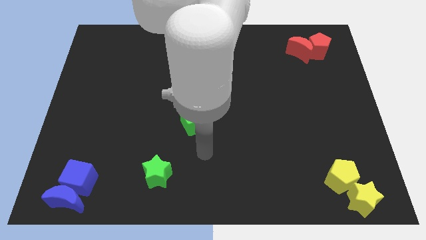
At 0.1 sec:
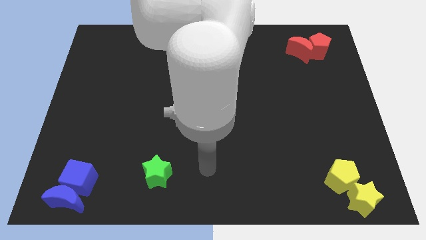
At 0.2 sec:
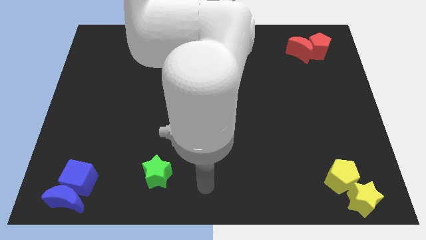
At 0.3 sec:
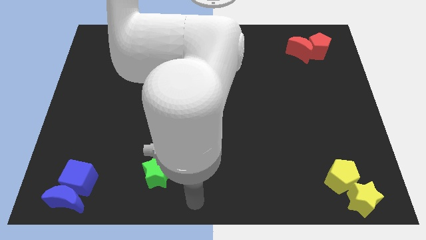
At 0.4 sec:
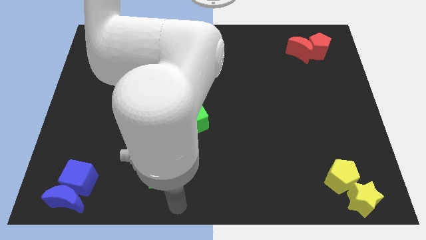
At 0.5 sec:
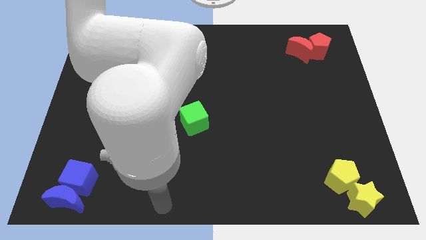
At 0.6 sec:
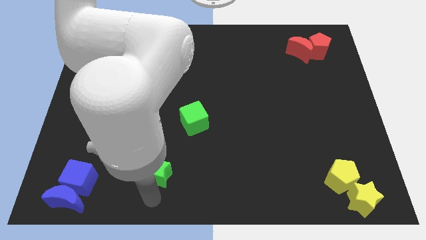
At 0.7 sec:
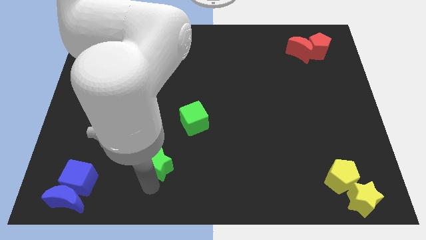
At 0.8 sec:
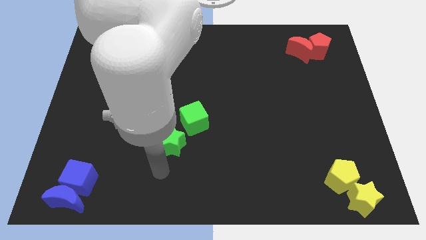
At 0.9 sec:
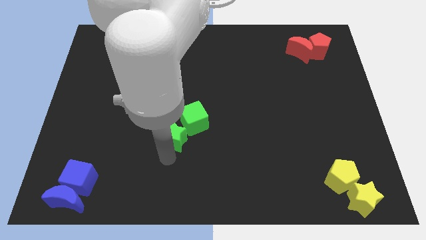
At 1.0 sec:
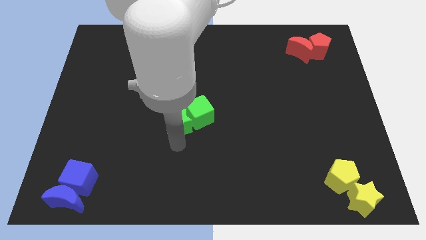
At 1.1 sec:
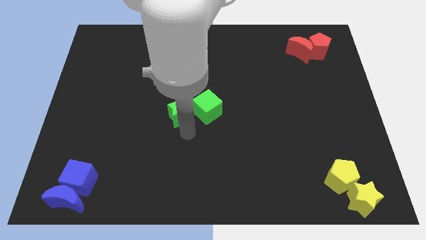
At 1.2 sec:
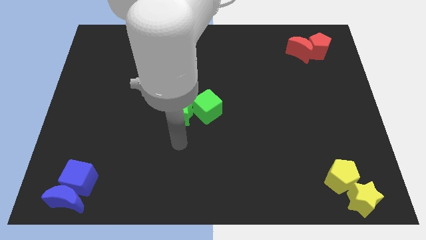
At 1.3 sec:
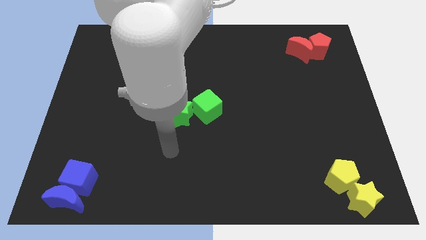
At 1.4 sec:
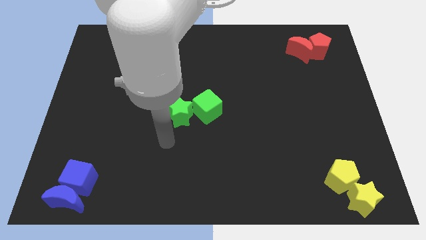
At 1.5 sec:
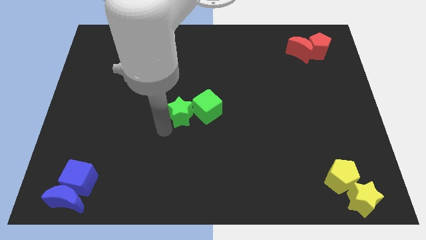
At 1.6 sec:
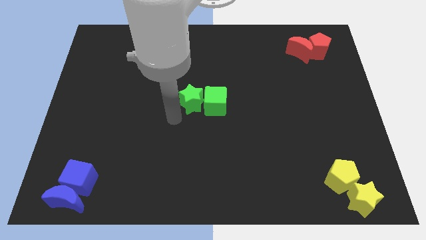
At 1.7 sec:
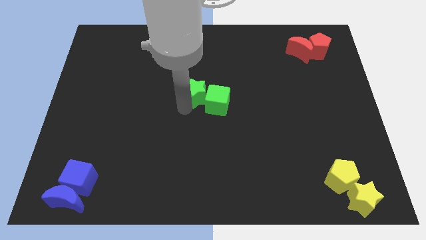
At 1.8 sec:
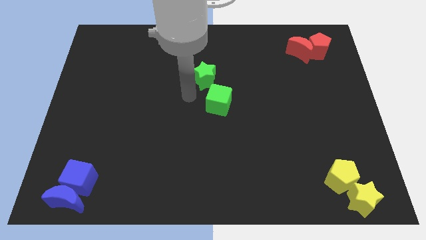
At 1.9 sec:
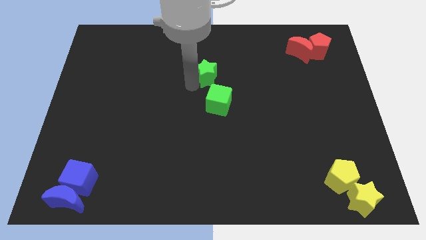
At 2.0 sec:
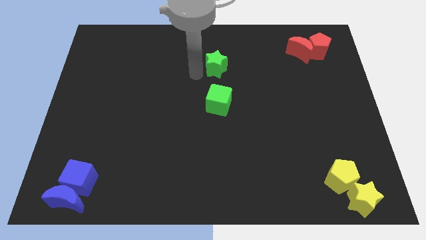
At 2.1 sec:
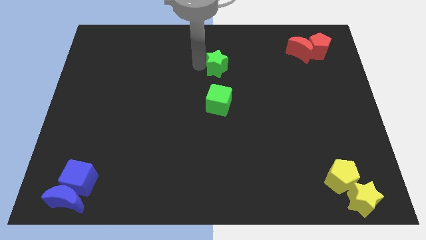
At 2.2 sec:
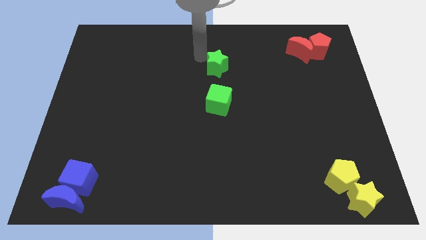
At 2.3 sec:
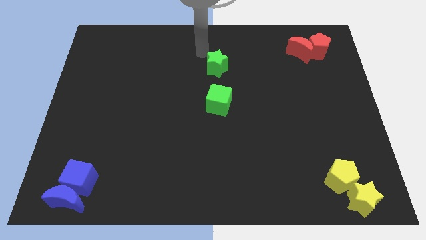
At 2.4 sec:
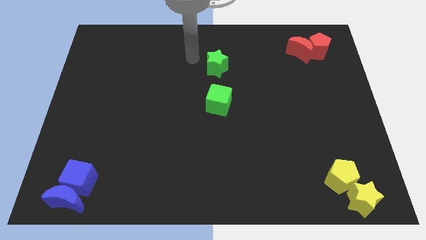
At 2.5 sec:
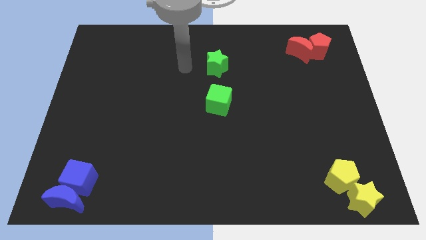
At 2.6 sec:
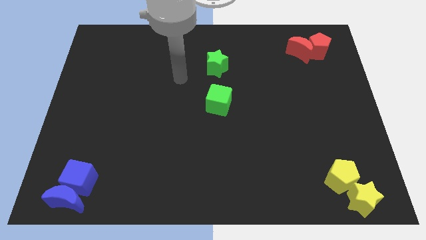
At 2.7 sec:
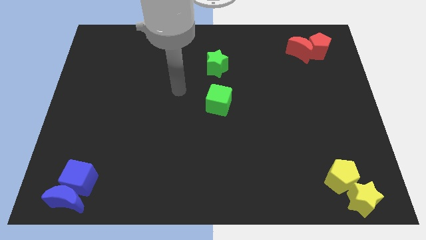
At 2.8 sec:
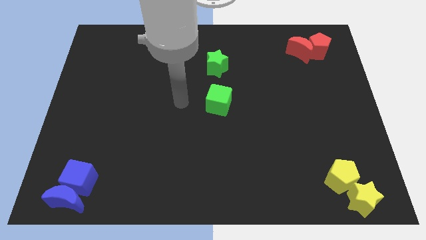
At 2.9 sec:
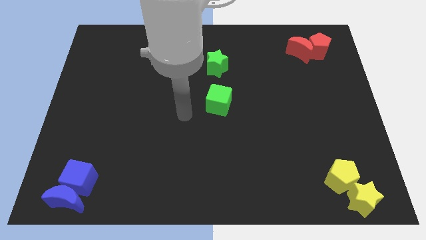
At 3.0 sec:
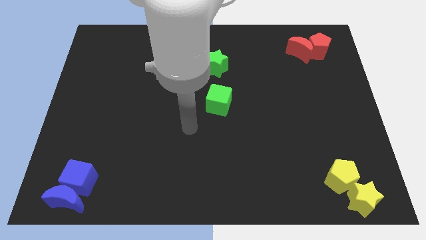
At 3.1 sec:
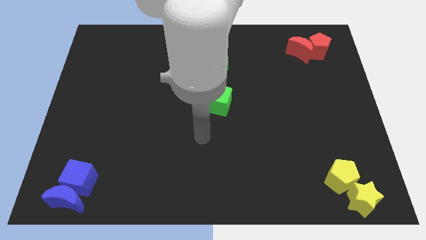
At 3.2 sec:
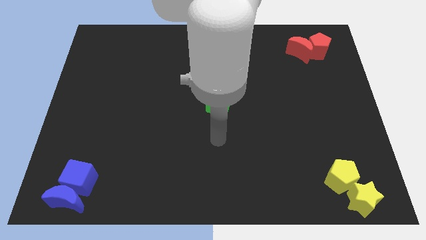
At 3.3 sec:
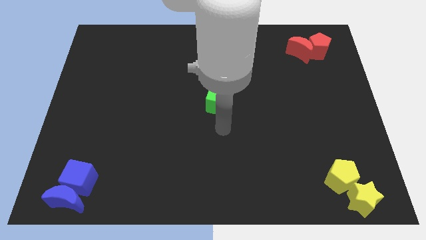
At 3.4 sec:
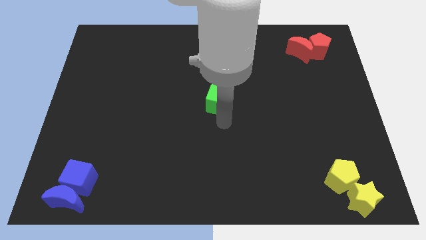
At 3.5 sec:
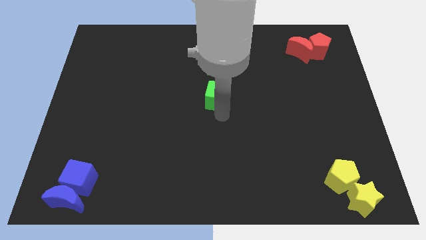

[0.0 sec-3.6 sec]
push the green cube with the green star

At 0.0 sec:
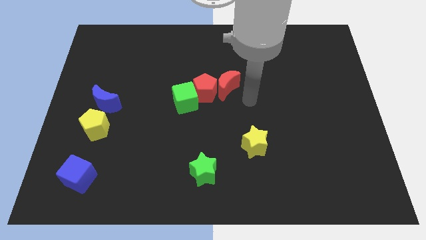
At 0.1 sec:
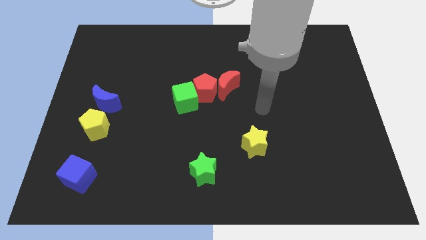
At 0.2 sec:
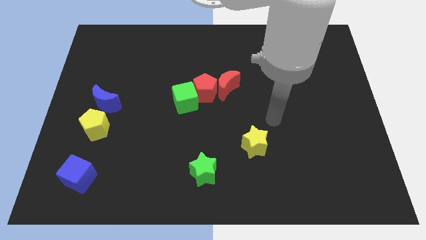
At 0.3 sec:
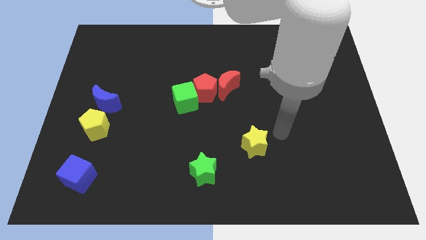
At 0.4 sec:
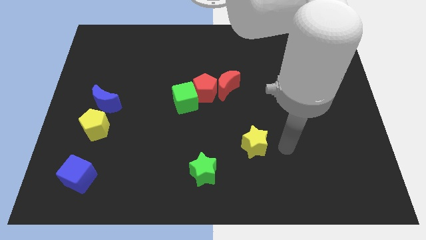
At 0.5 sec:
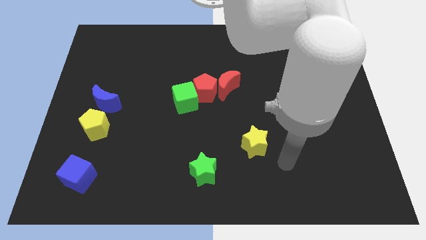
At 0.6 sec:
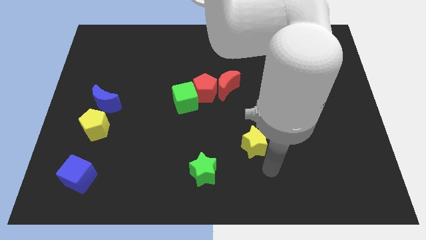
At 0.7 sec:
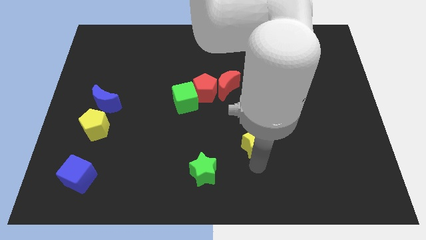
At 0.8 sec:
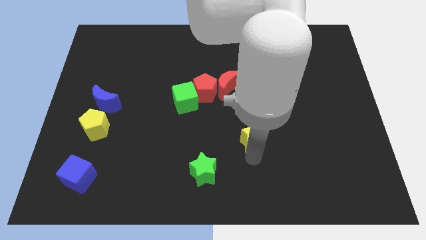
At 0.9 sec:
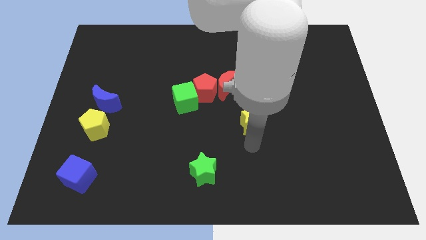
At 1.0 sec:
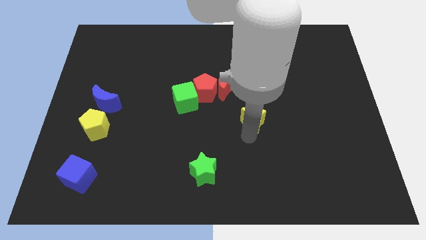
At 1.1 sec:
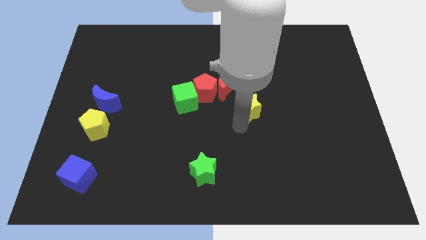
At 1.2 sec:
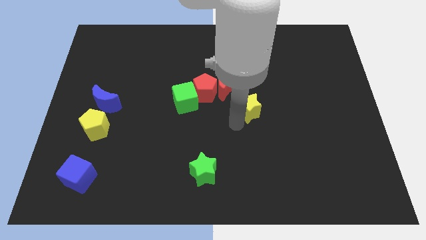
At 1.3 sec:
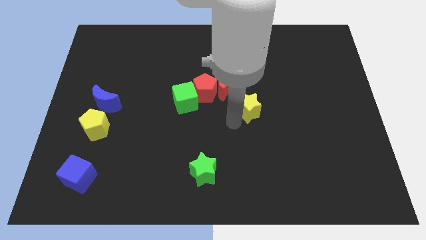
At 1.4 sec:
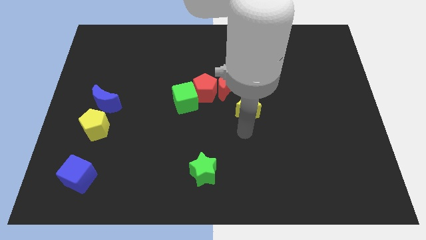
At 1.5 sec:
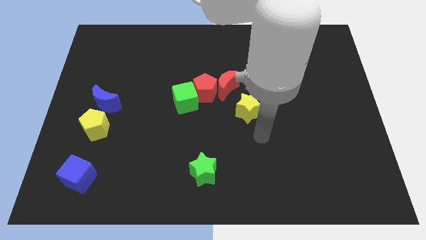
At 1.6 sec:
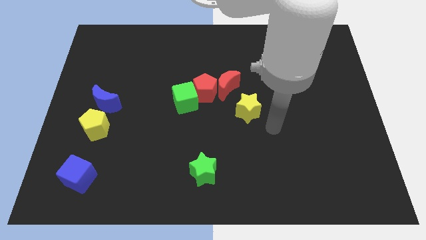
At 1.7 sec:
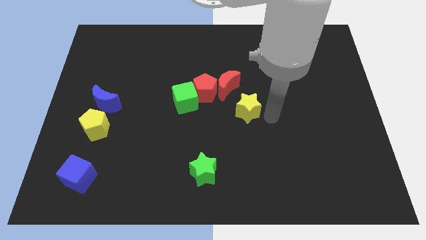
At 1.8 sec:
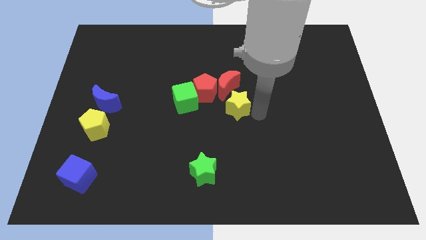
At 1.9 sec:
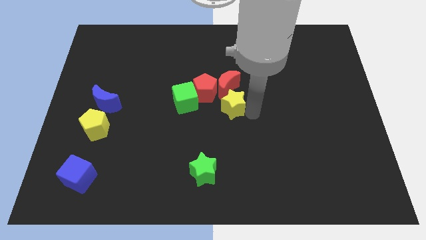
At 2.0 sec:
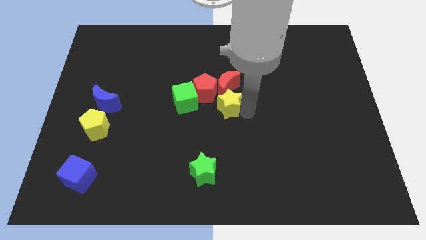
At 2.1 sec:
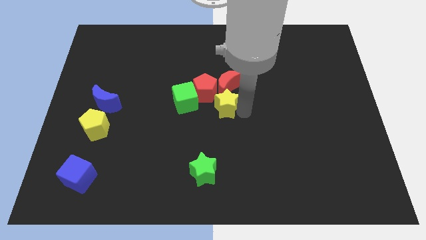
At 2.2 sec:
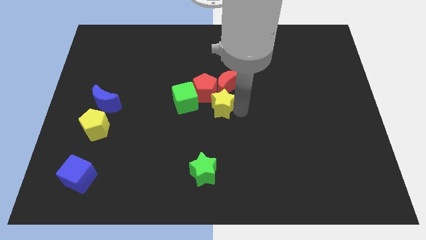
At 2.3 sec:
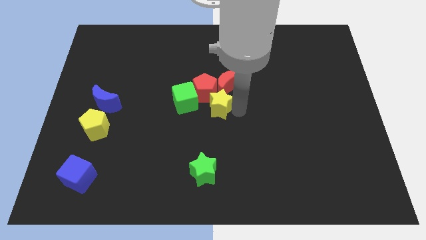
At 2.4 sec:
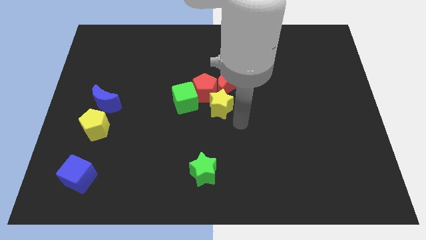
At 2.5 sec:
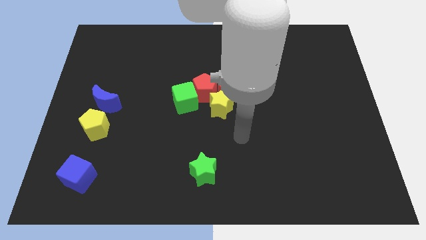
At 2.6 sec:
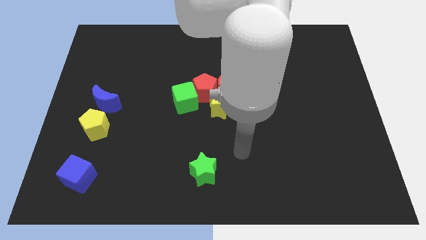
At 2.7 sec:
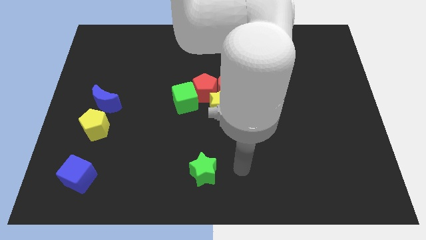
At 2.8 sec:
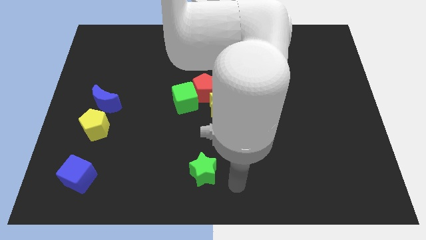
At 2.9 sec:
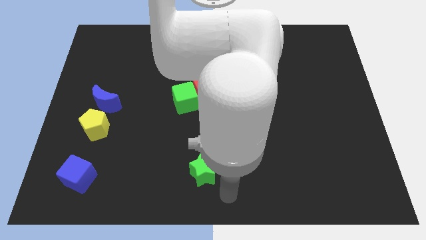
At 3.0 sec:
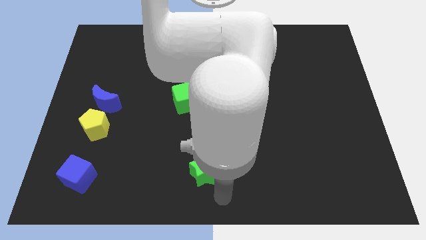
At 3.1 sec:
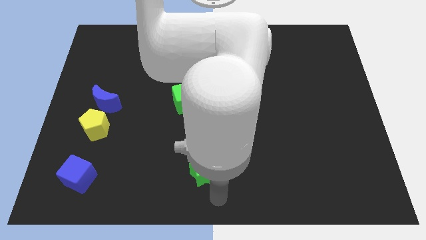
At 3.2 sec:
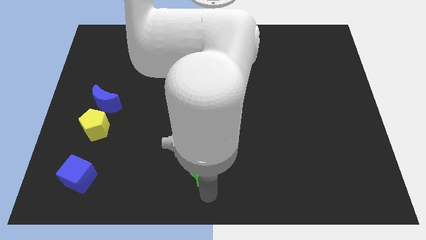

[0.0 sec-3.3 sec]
push the yellow star to the bottom side of the red blocks

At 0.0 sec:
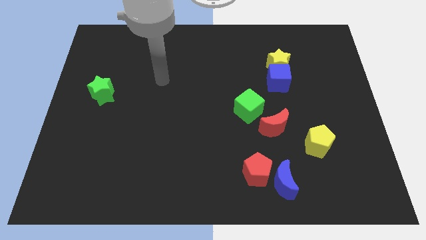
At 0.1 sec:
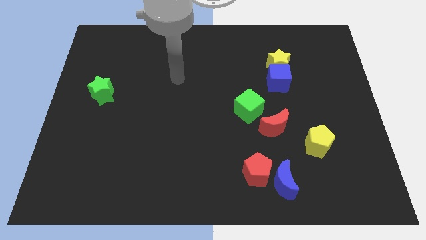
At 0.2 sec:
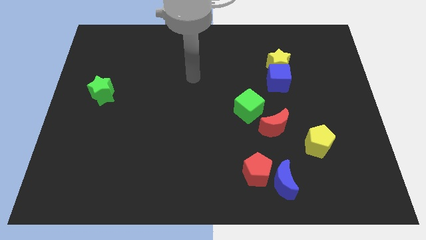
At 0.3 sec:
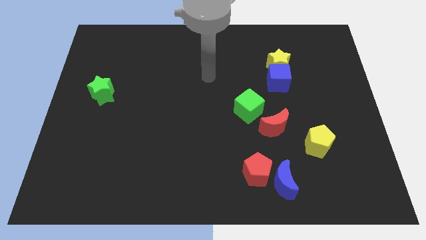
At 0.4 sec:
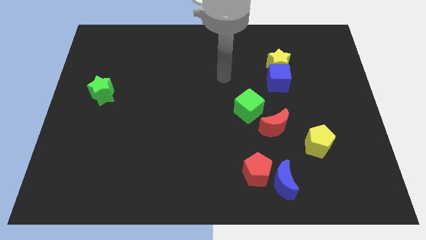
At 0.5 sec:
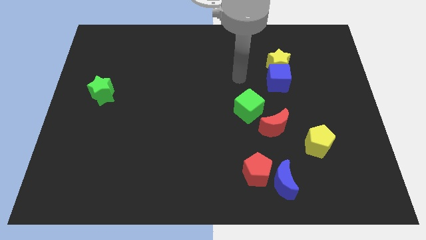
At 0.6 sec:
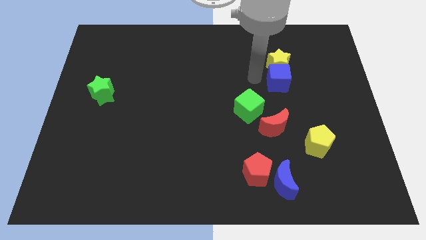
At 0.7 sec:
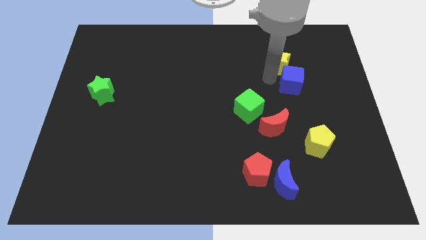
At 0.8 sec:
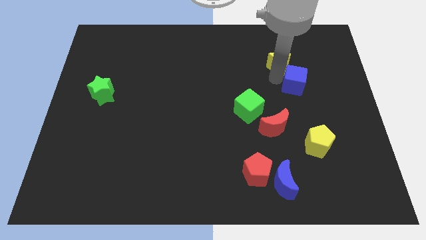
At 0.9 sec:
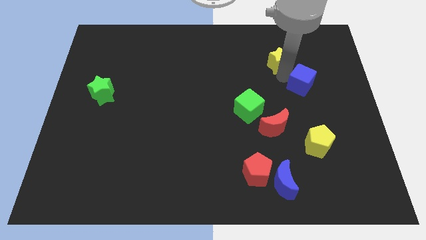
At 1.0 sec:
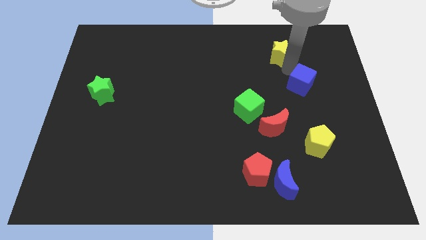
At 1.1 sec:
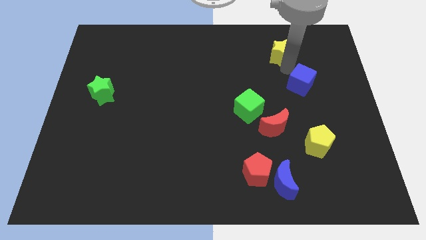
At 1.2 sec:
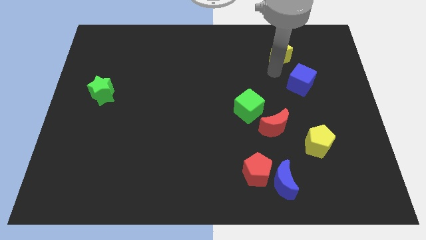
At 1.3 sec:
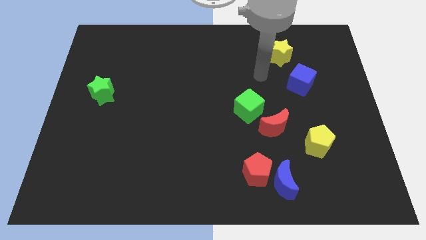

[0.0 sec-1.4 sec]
separate the blue cube and yellow star

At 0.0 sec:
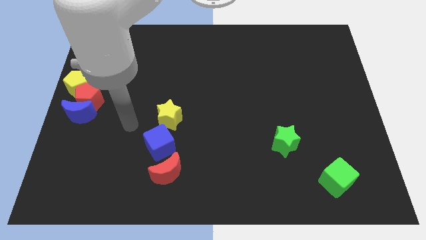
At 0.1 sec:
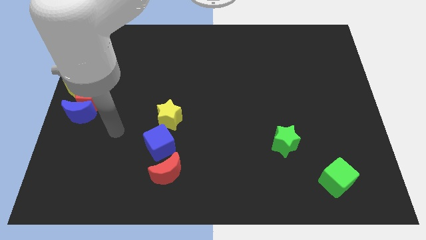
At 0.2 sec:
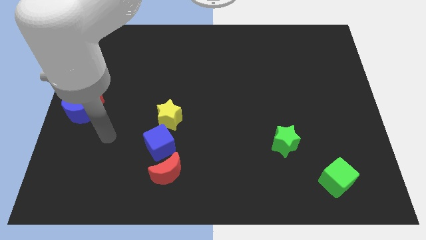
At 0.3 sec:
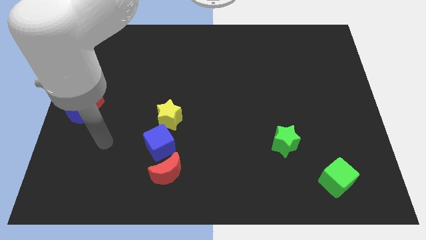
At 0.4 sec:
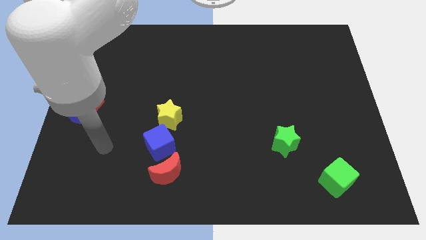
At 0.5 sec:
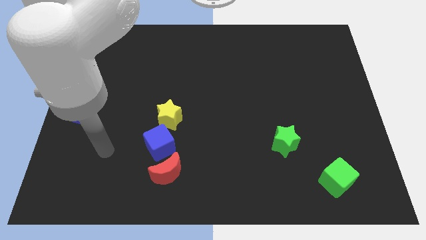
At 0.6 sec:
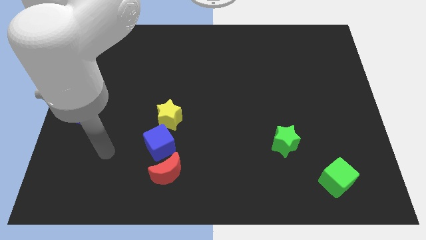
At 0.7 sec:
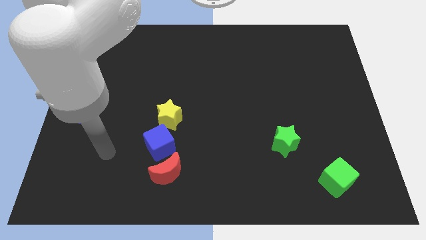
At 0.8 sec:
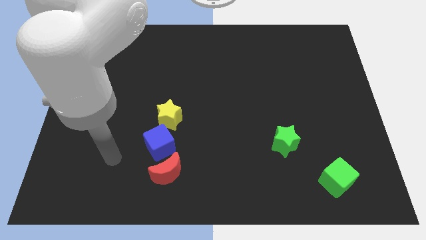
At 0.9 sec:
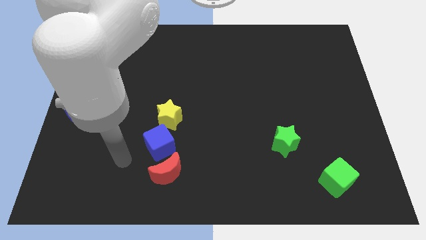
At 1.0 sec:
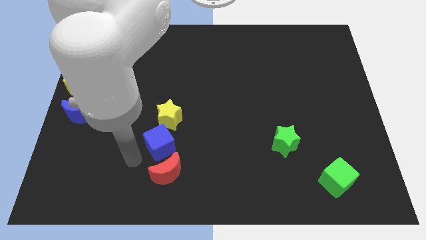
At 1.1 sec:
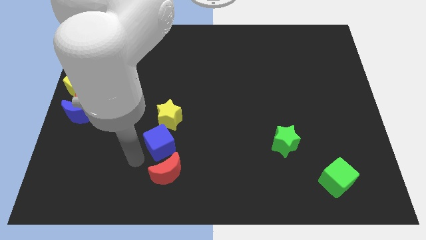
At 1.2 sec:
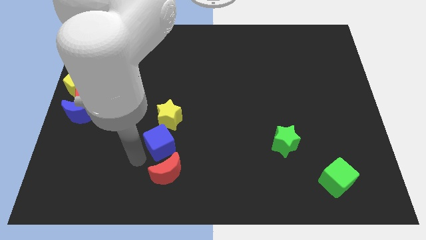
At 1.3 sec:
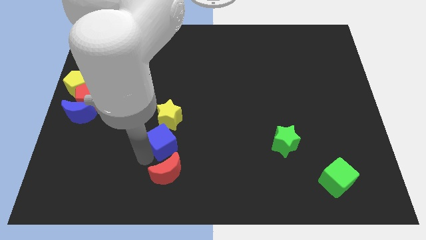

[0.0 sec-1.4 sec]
touch the left side of the blue cube
